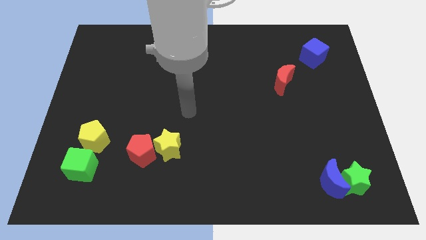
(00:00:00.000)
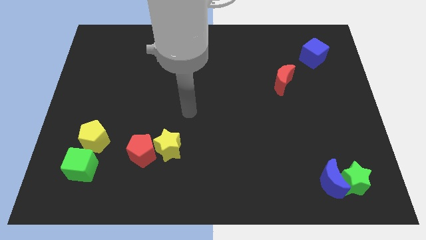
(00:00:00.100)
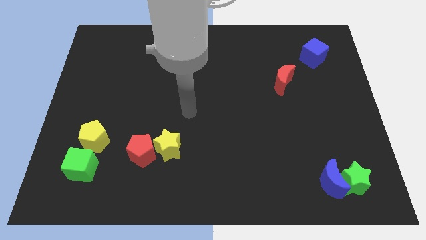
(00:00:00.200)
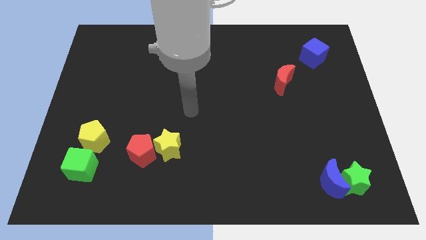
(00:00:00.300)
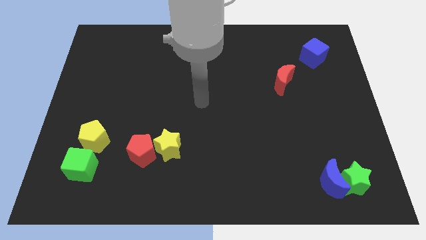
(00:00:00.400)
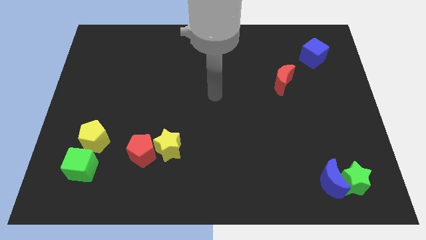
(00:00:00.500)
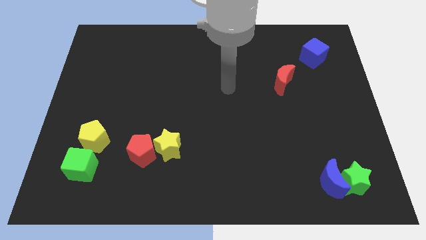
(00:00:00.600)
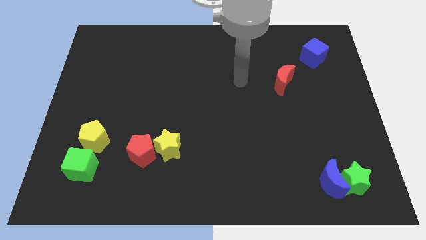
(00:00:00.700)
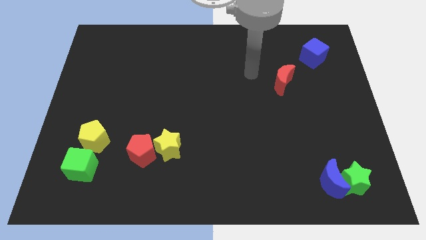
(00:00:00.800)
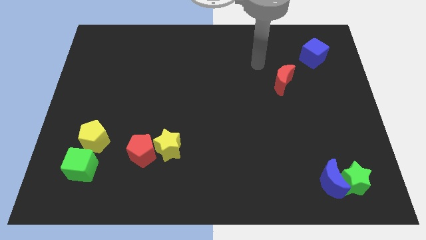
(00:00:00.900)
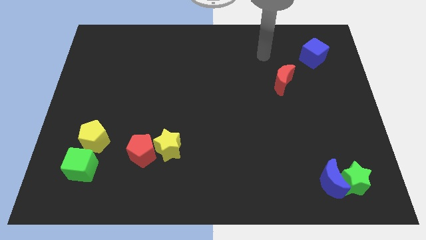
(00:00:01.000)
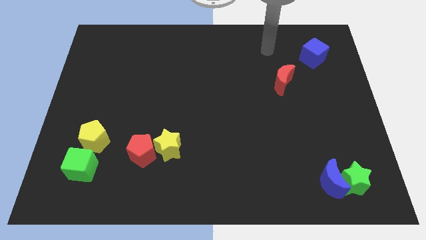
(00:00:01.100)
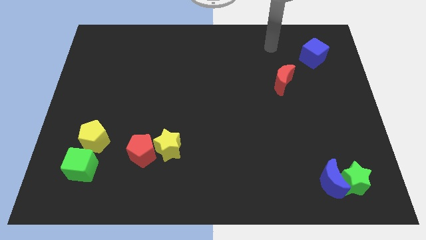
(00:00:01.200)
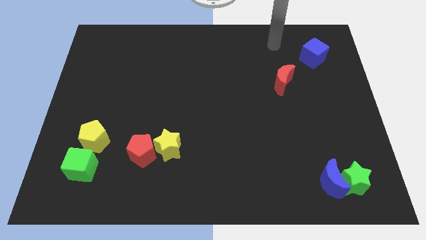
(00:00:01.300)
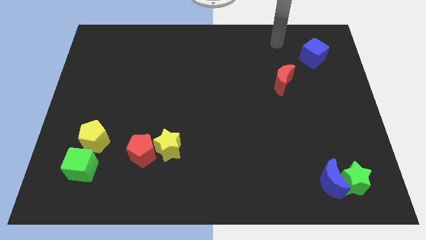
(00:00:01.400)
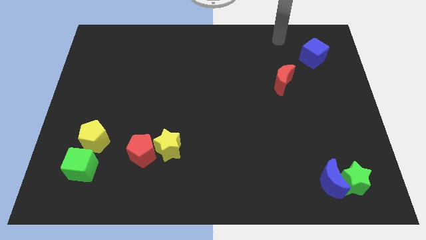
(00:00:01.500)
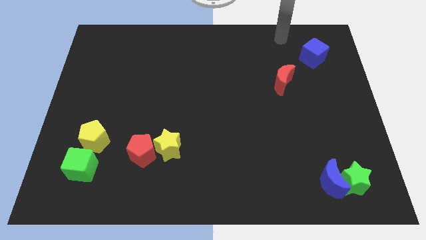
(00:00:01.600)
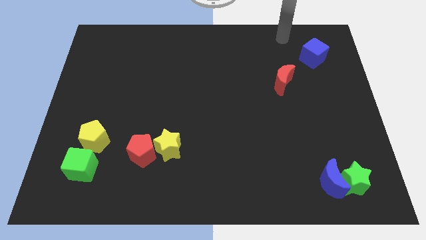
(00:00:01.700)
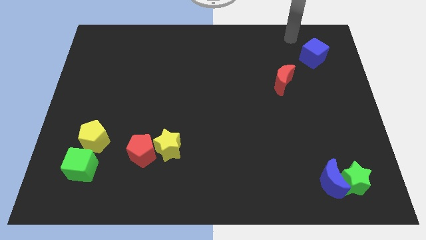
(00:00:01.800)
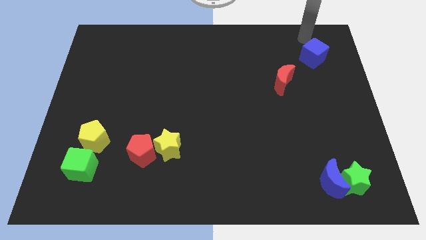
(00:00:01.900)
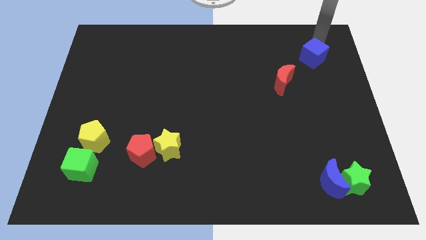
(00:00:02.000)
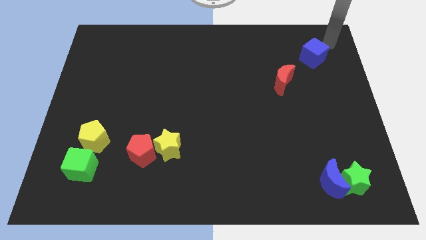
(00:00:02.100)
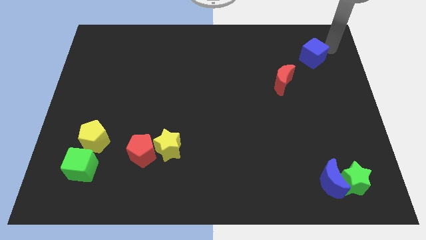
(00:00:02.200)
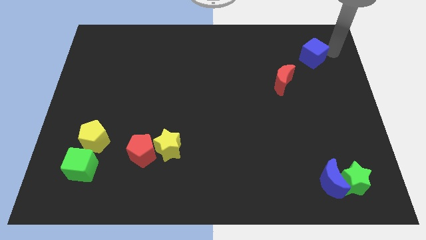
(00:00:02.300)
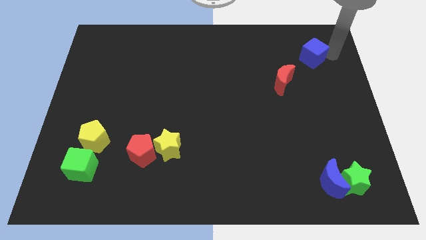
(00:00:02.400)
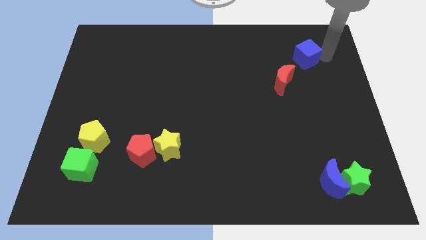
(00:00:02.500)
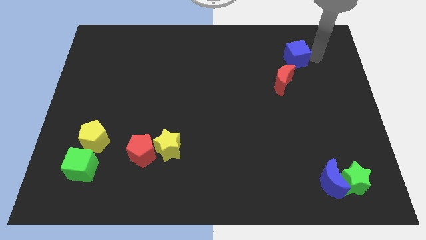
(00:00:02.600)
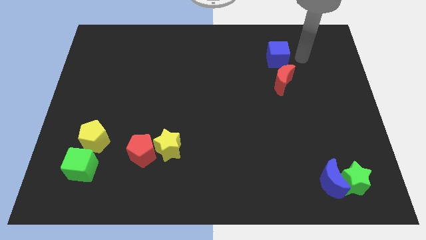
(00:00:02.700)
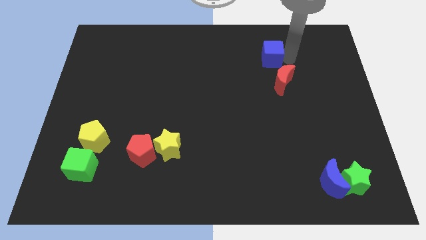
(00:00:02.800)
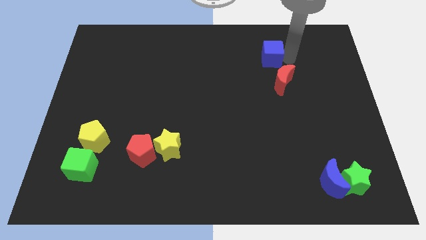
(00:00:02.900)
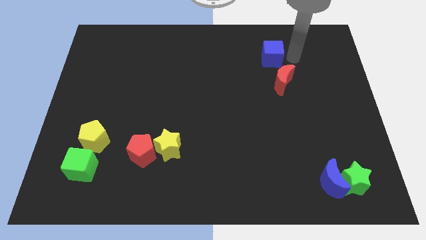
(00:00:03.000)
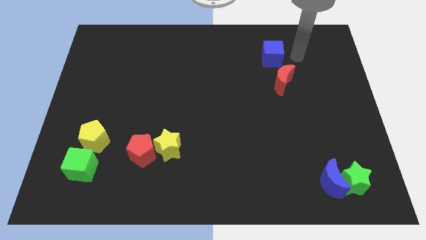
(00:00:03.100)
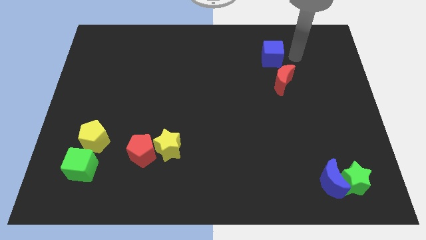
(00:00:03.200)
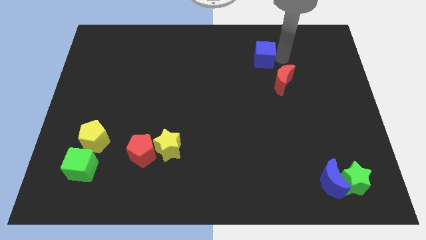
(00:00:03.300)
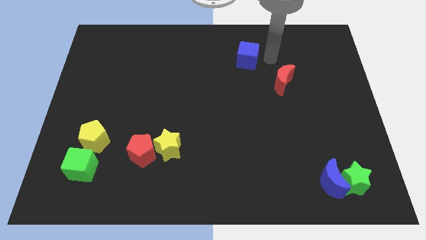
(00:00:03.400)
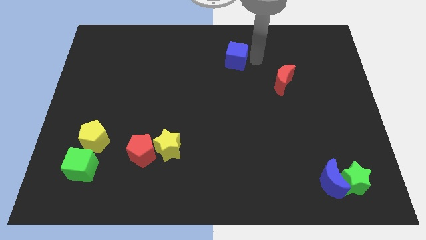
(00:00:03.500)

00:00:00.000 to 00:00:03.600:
push the blue cube towards the left side of the board

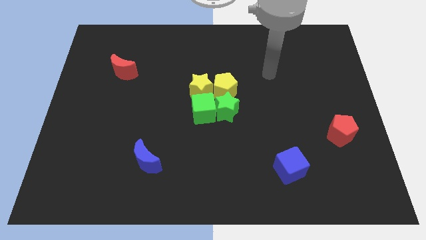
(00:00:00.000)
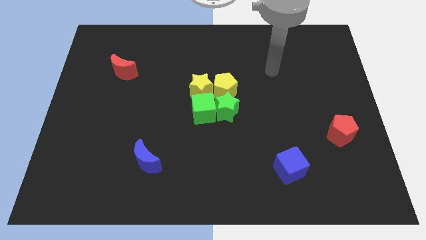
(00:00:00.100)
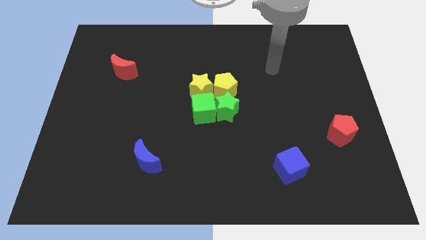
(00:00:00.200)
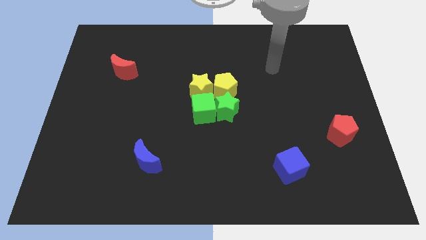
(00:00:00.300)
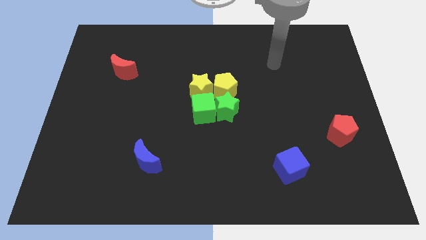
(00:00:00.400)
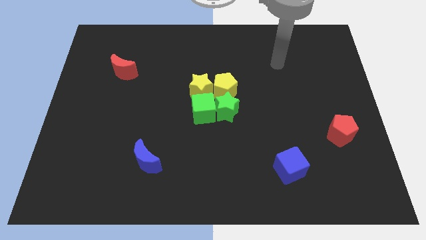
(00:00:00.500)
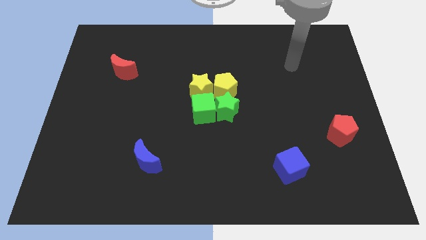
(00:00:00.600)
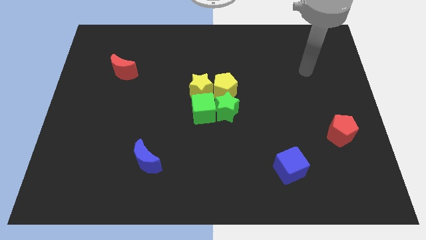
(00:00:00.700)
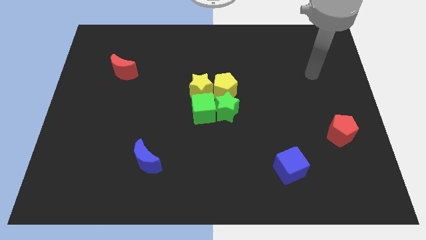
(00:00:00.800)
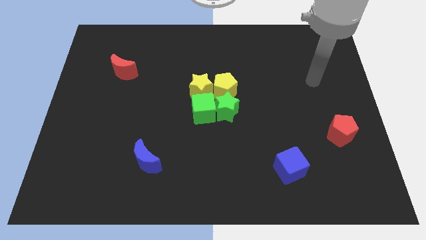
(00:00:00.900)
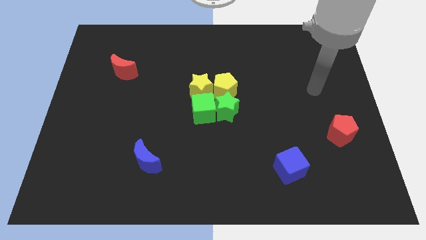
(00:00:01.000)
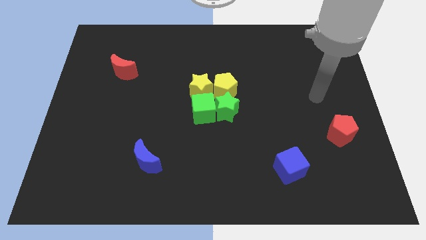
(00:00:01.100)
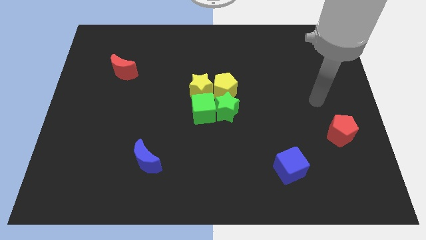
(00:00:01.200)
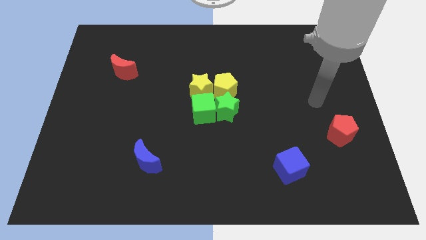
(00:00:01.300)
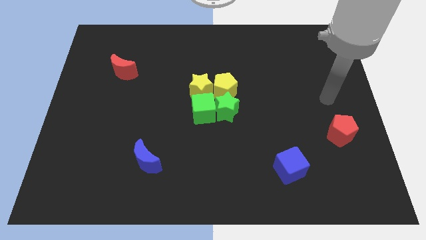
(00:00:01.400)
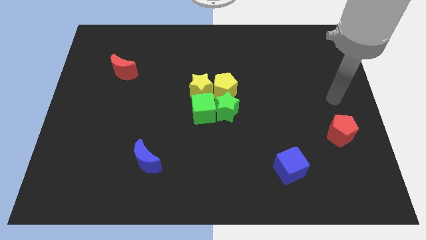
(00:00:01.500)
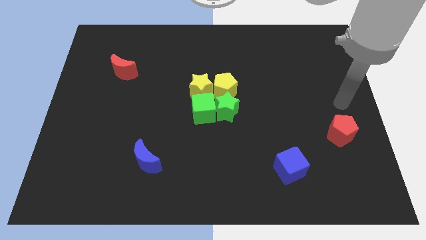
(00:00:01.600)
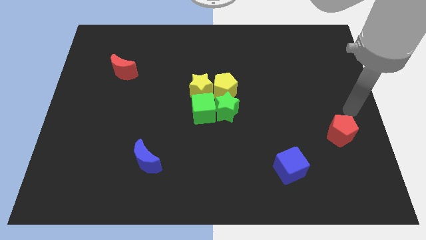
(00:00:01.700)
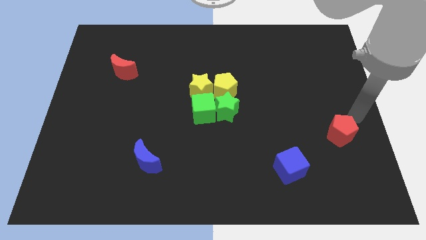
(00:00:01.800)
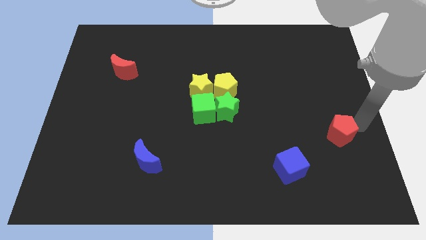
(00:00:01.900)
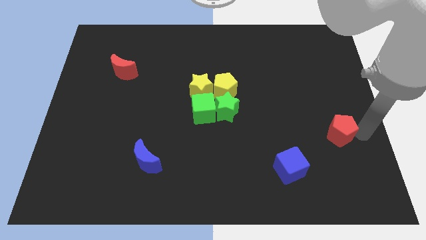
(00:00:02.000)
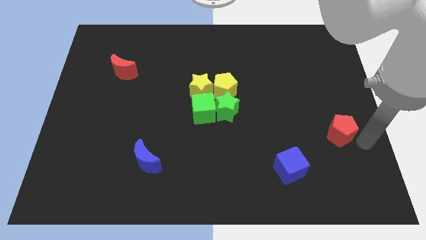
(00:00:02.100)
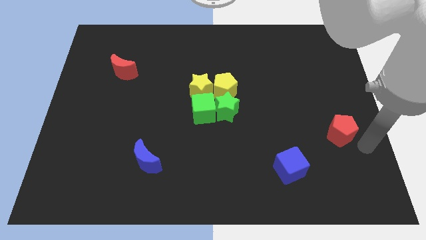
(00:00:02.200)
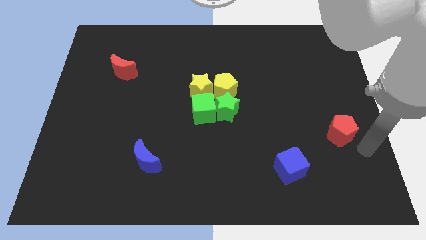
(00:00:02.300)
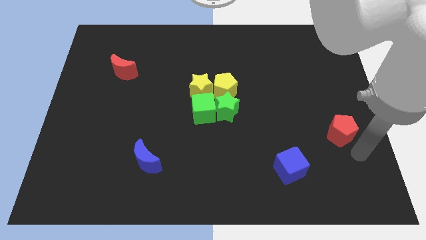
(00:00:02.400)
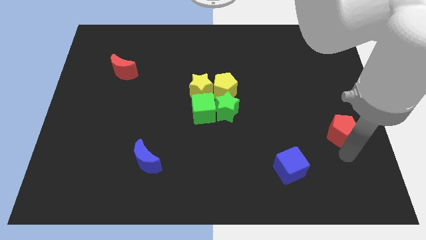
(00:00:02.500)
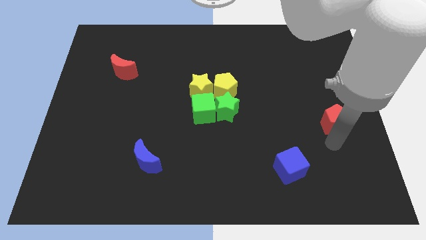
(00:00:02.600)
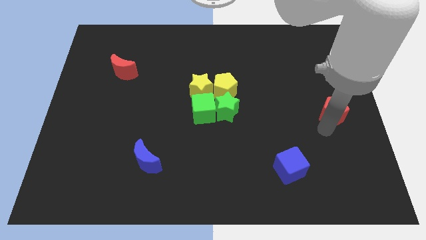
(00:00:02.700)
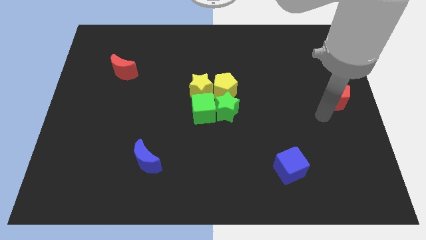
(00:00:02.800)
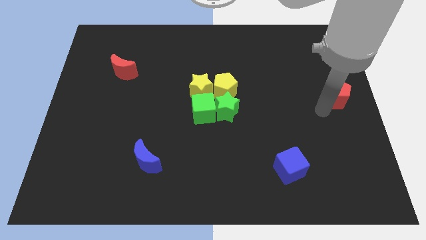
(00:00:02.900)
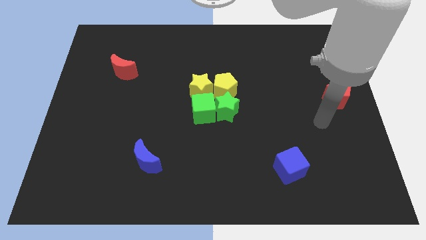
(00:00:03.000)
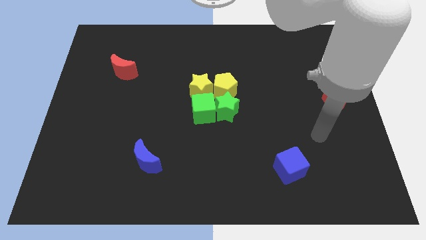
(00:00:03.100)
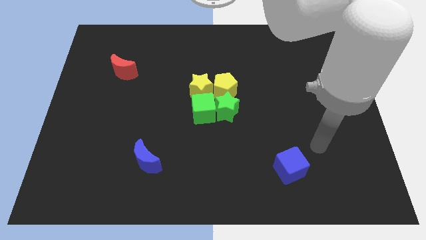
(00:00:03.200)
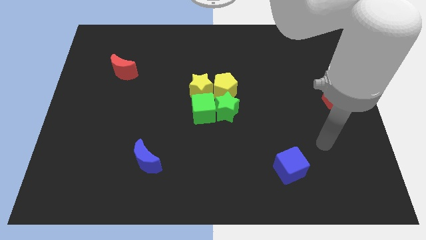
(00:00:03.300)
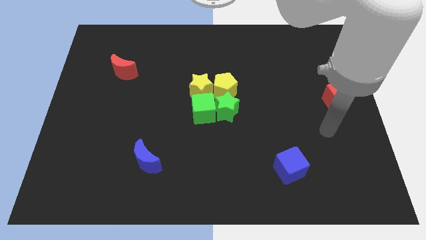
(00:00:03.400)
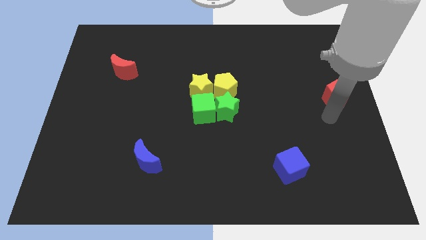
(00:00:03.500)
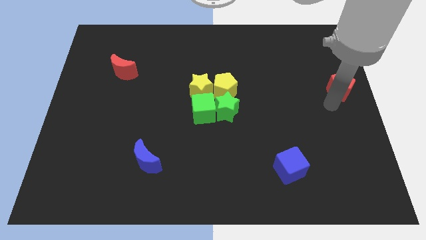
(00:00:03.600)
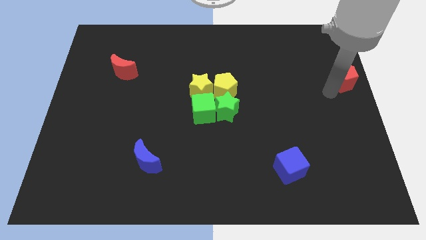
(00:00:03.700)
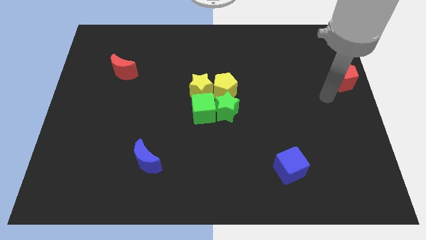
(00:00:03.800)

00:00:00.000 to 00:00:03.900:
move the red pentagon to the right of the board

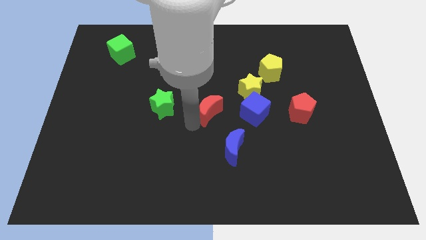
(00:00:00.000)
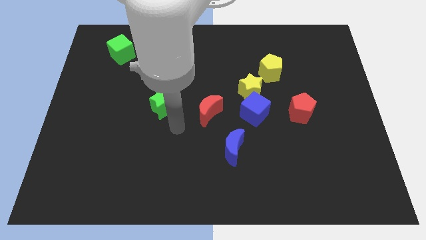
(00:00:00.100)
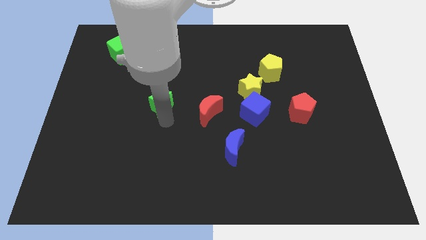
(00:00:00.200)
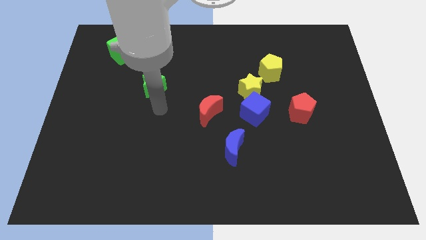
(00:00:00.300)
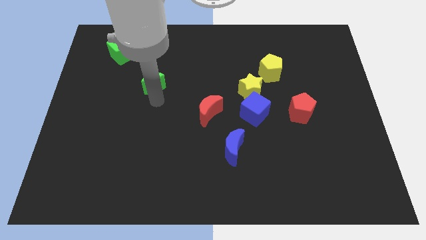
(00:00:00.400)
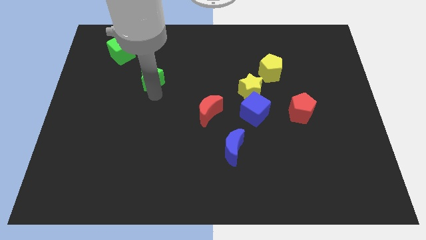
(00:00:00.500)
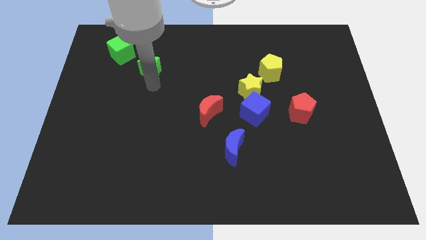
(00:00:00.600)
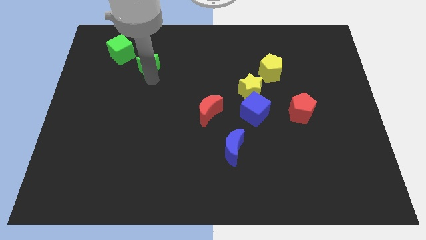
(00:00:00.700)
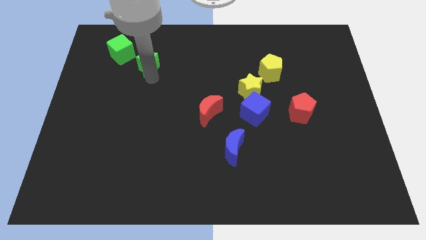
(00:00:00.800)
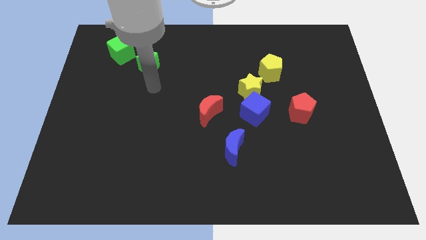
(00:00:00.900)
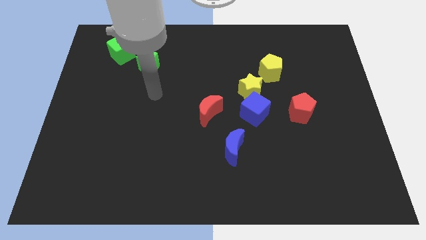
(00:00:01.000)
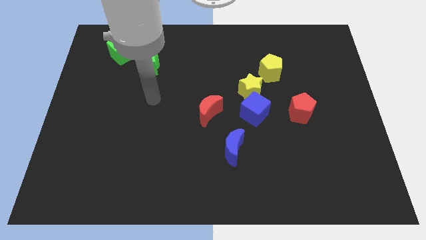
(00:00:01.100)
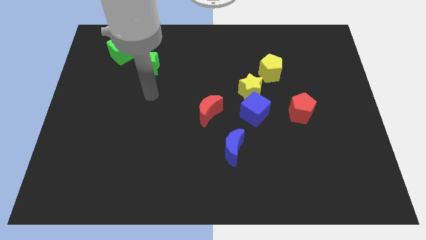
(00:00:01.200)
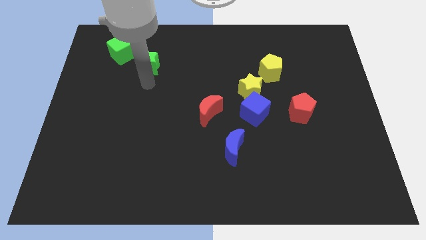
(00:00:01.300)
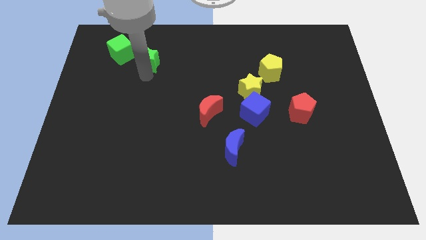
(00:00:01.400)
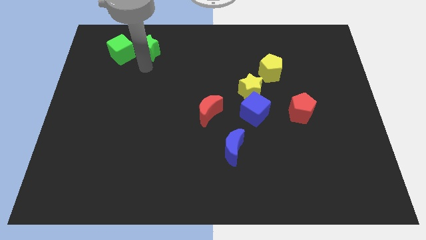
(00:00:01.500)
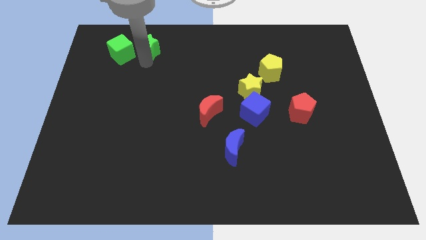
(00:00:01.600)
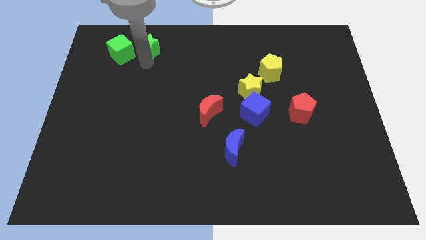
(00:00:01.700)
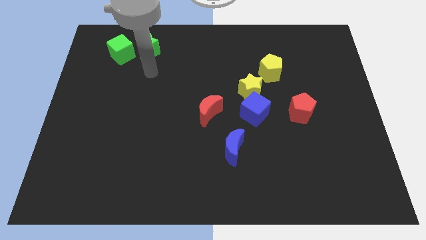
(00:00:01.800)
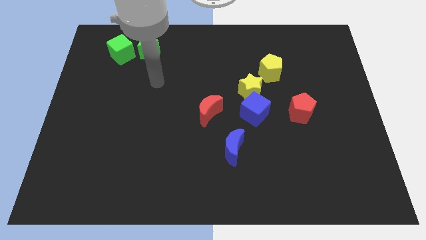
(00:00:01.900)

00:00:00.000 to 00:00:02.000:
place the green star to the right side of the green cube
